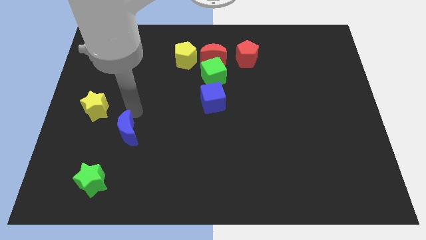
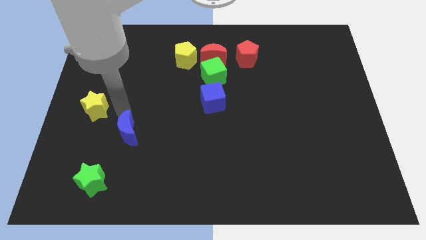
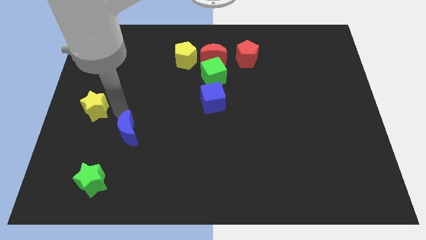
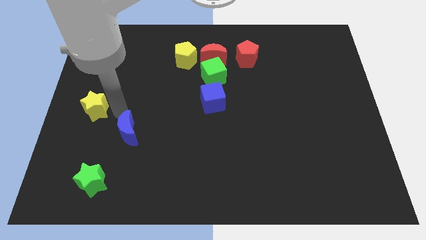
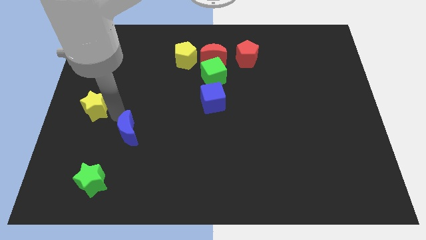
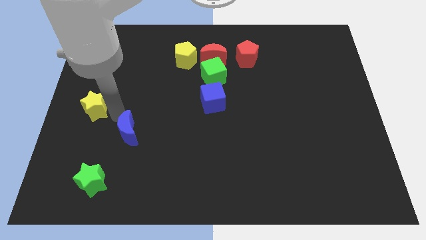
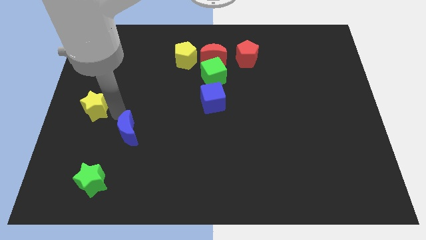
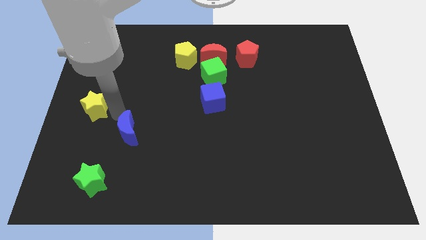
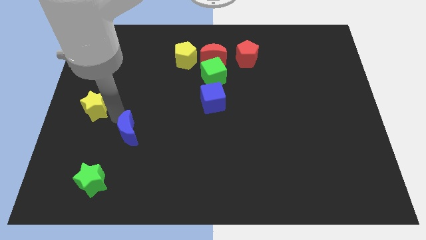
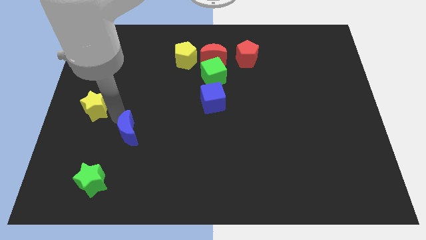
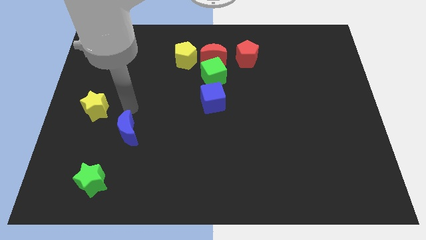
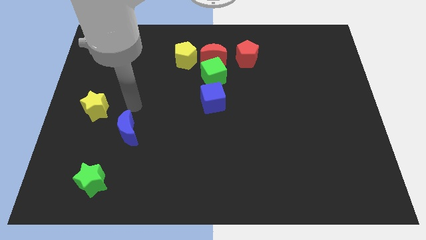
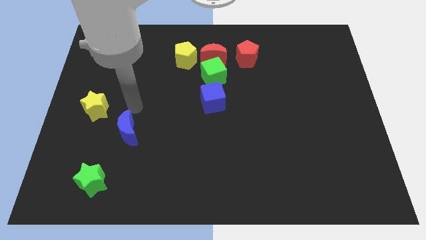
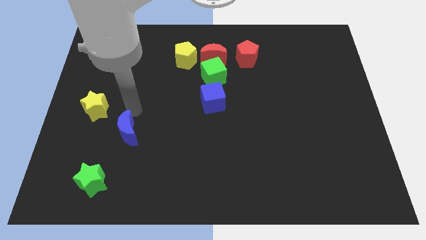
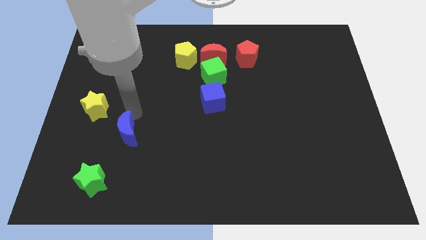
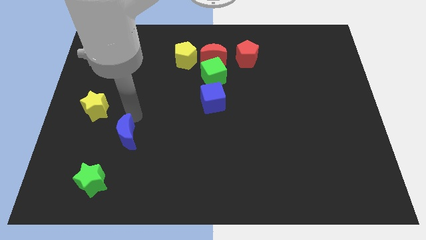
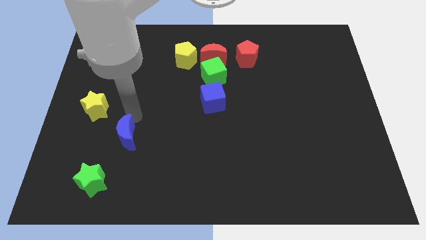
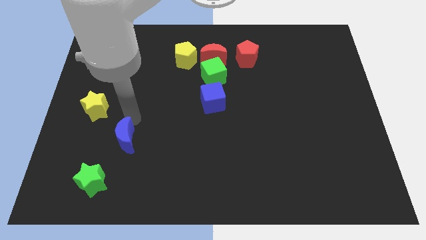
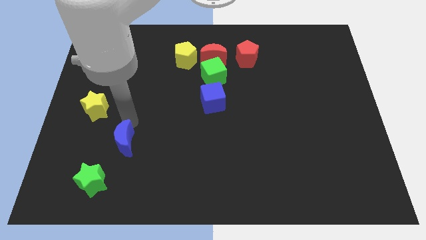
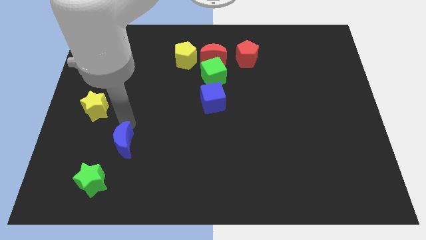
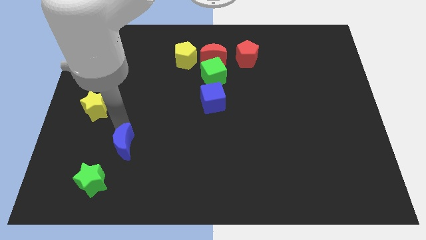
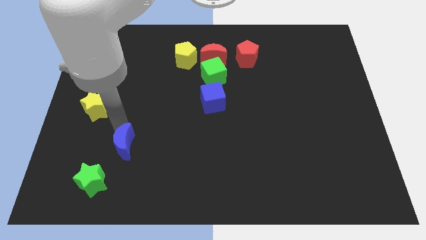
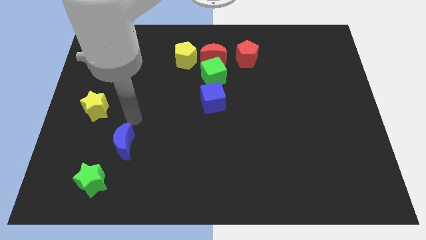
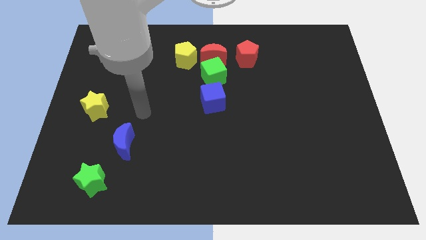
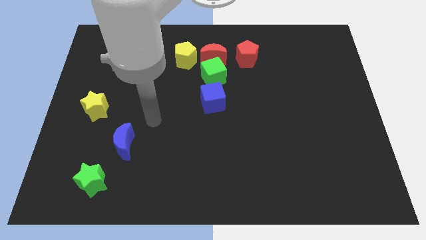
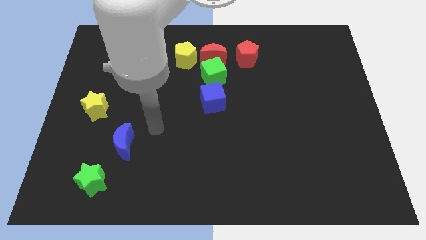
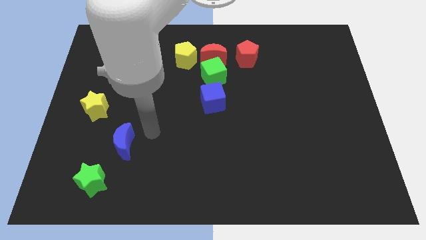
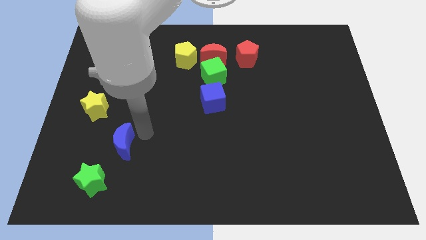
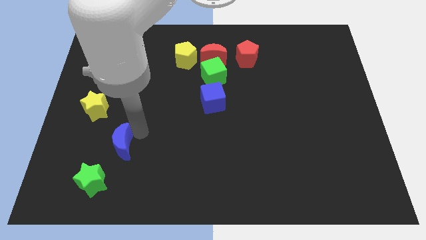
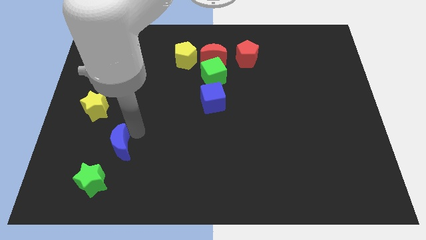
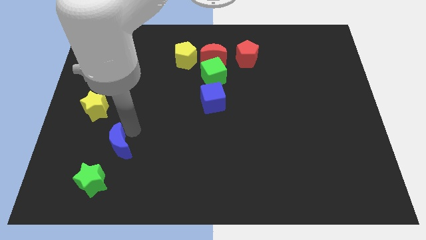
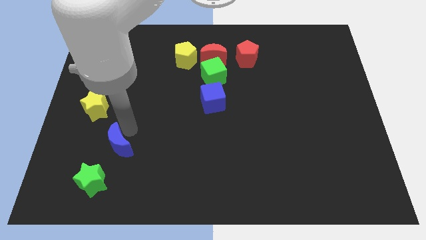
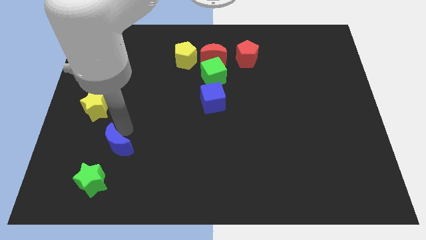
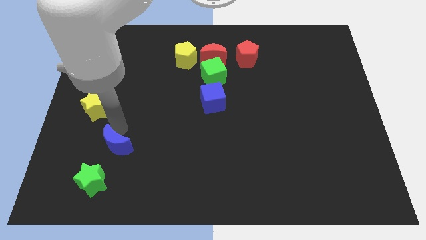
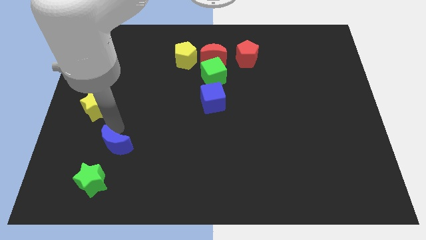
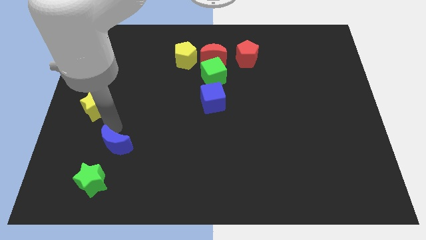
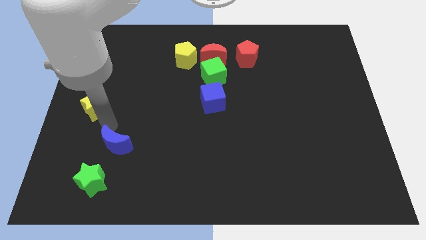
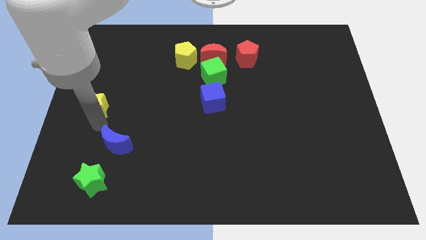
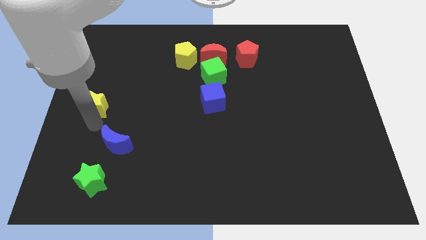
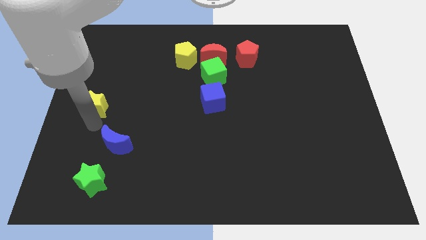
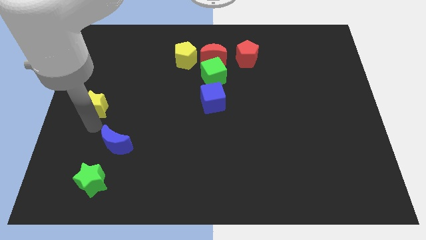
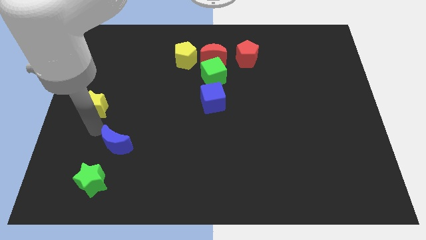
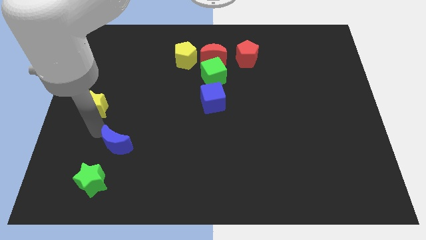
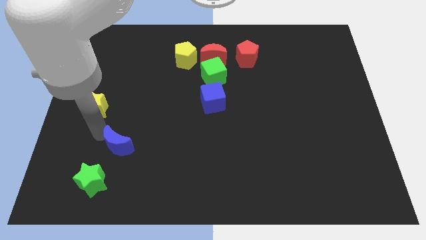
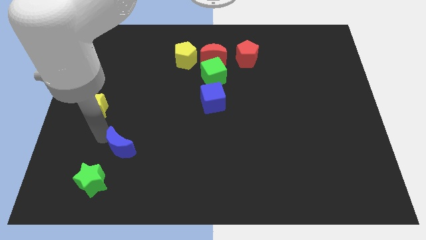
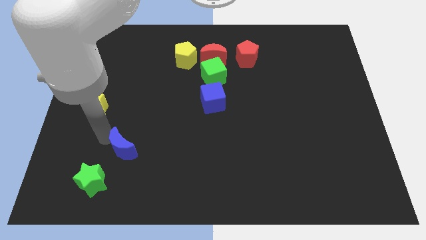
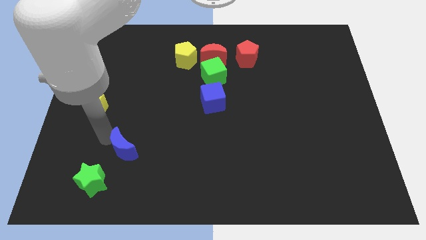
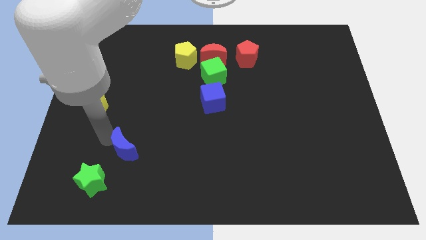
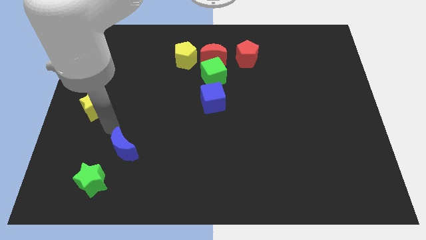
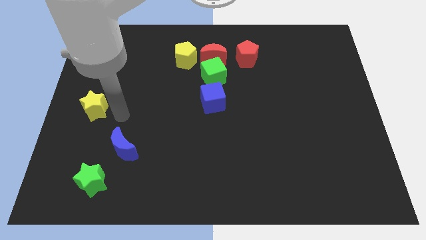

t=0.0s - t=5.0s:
place the blue crescent to the right of green star

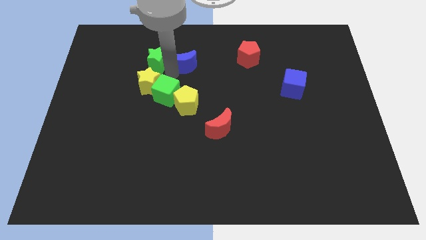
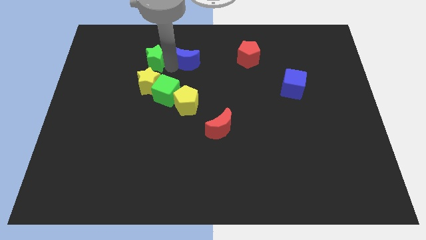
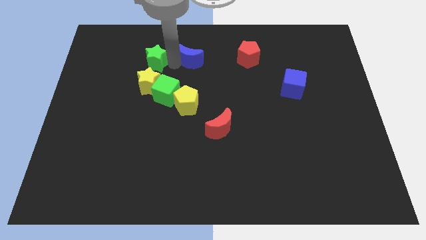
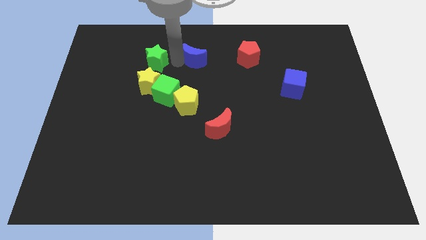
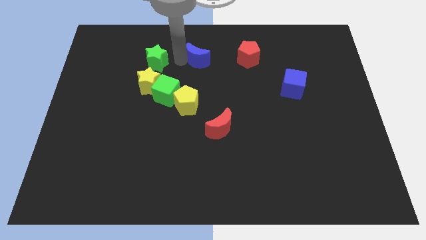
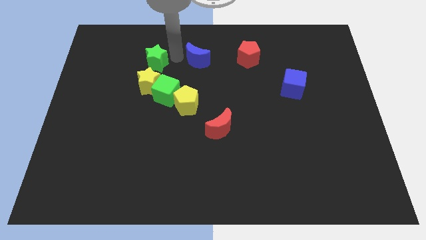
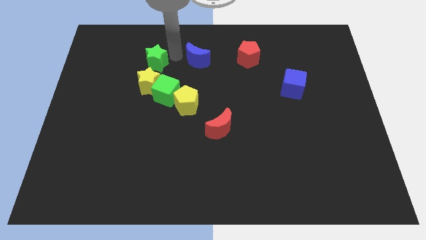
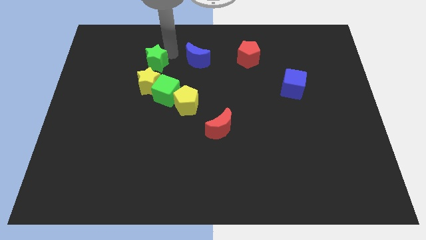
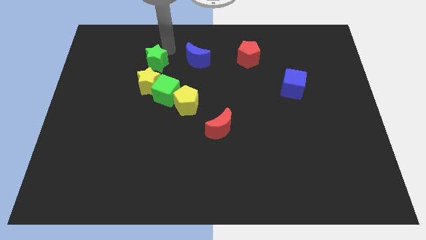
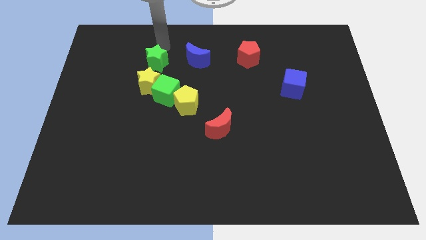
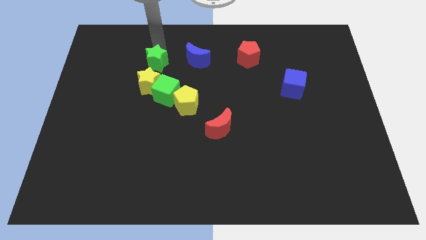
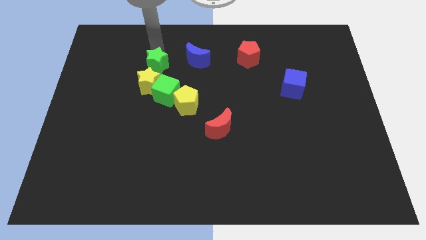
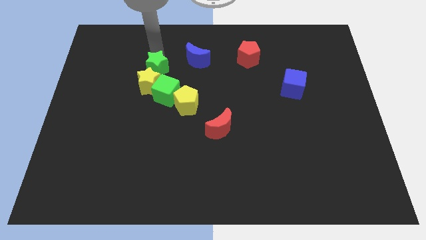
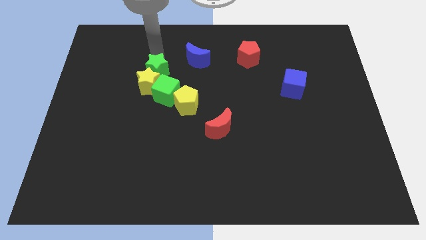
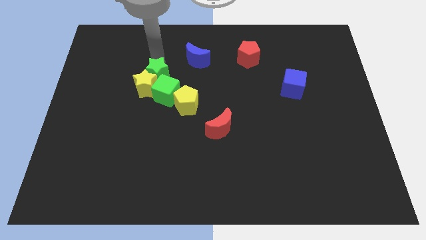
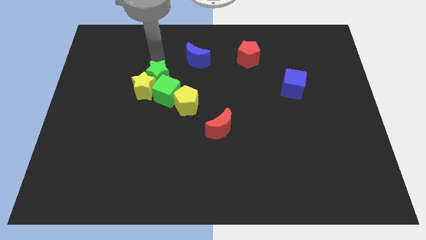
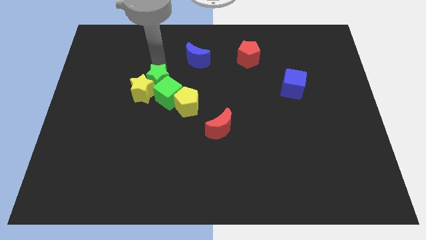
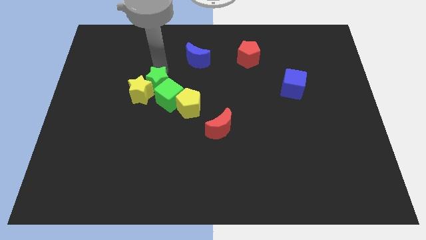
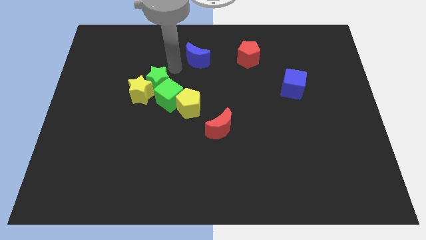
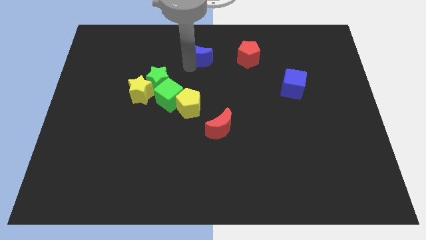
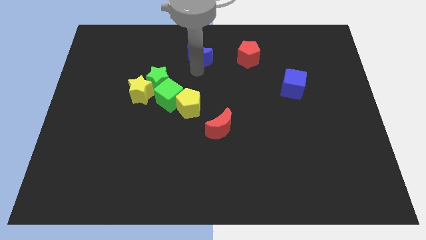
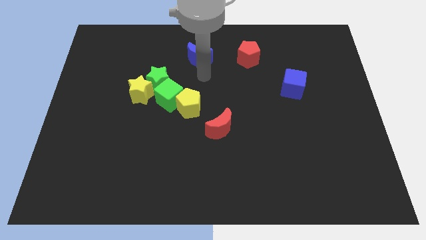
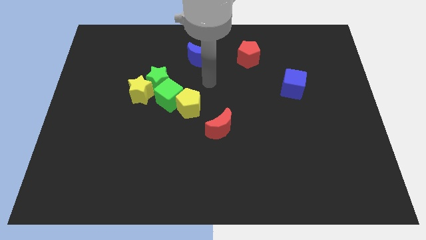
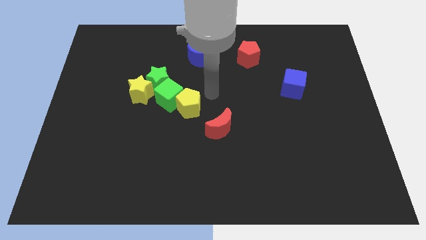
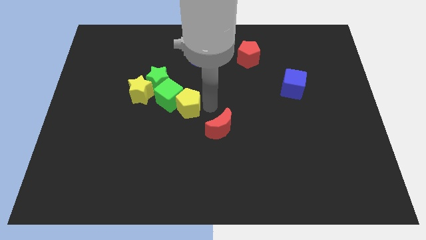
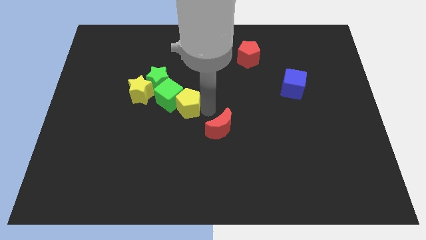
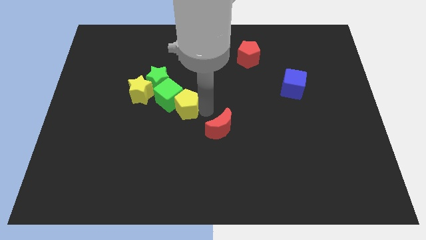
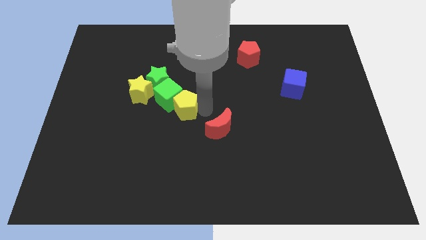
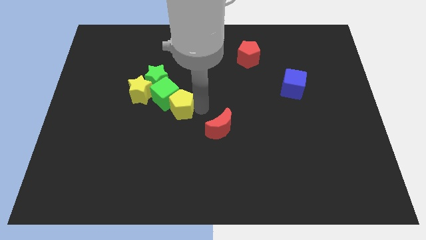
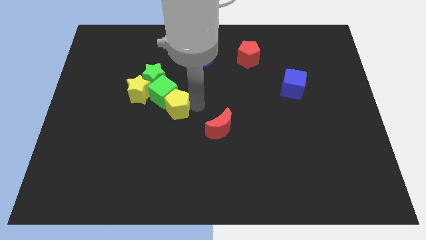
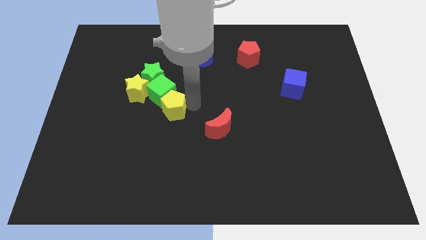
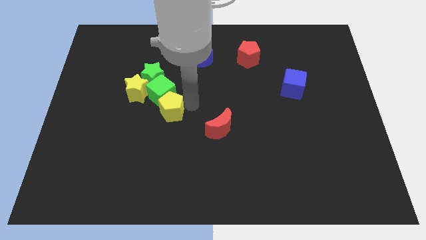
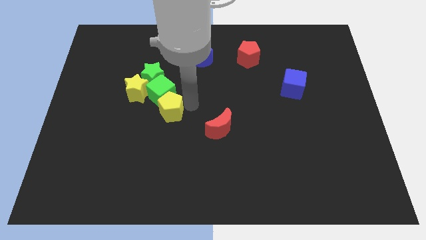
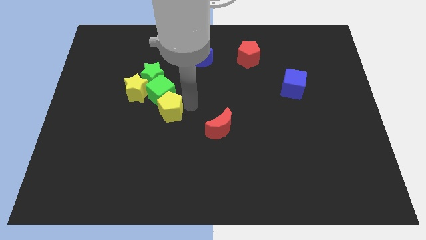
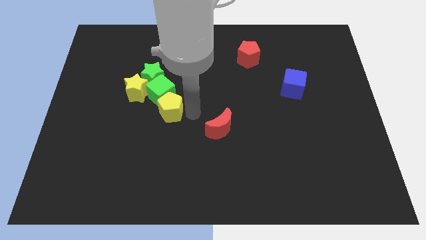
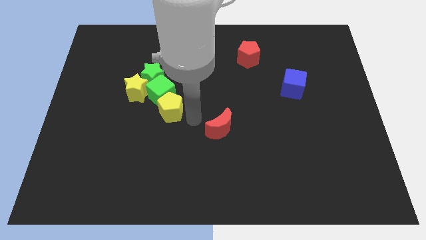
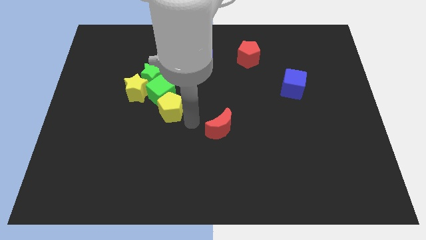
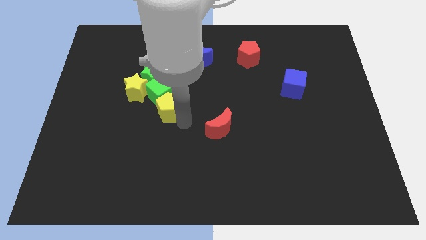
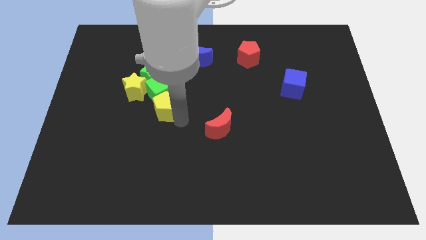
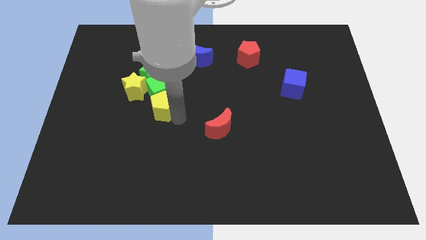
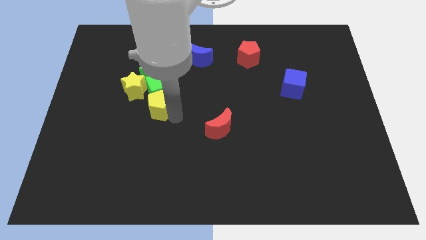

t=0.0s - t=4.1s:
place the green and yellow blocks at one place
